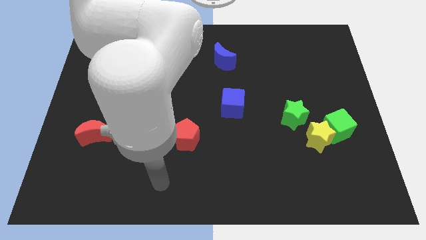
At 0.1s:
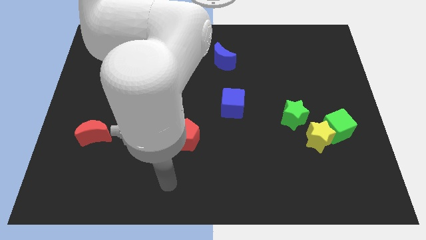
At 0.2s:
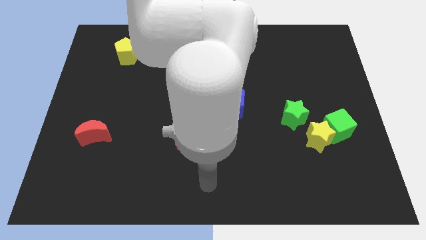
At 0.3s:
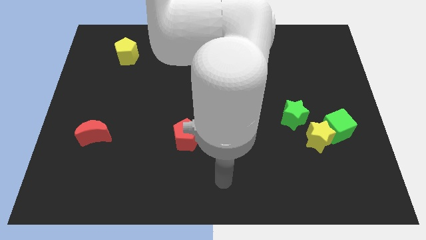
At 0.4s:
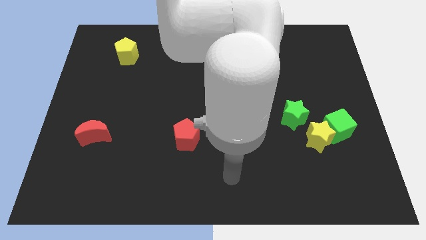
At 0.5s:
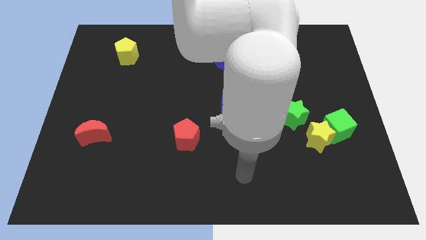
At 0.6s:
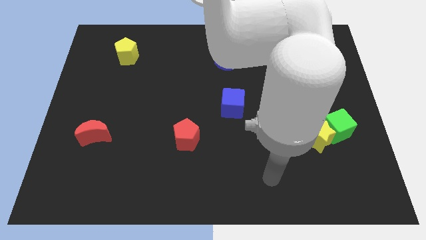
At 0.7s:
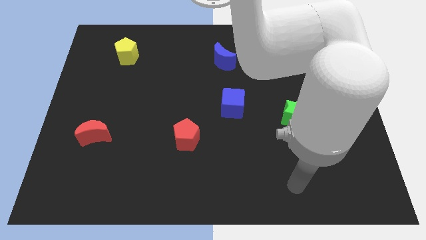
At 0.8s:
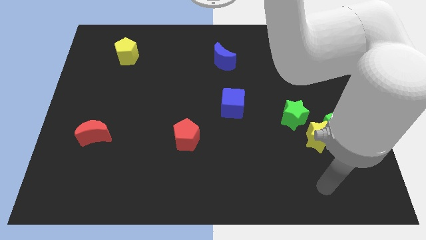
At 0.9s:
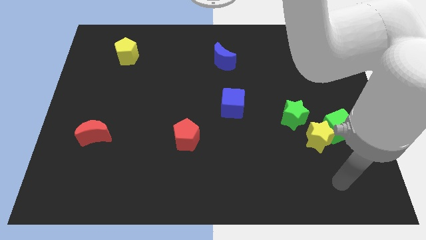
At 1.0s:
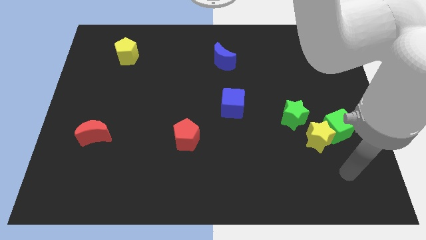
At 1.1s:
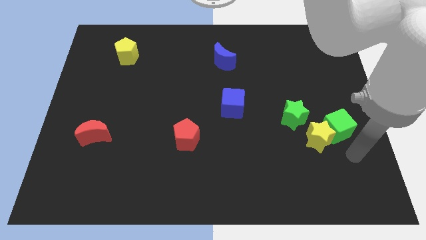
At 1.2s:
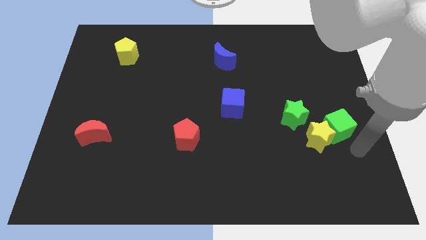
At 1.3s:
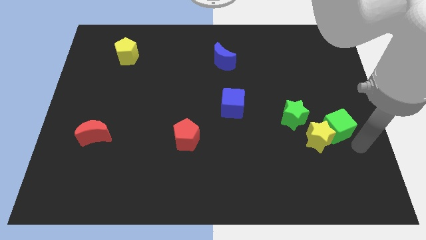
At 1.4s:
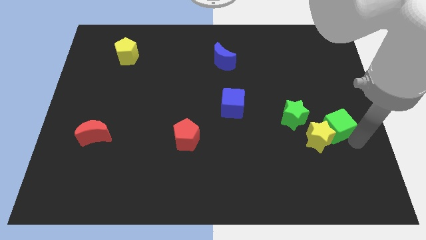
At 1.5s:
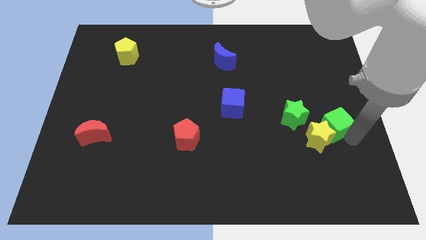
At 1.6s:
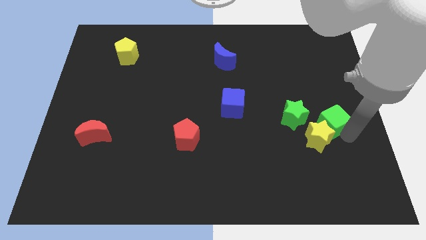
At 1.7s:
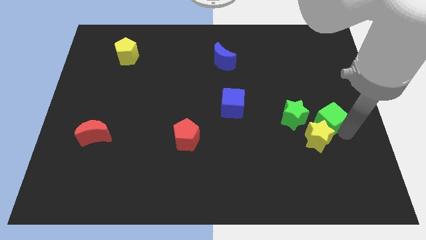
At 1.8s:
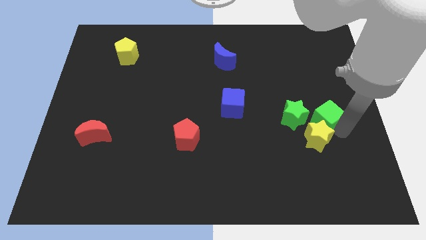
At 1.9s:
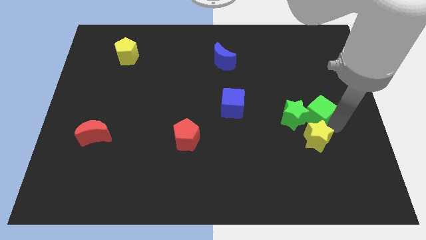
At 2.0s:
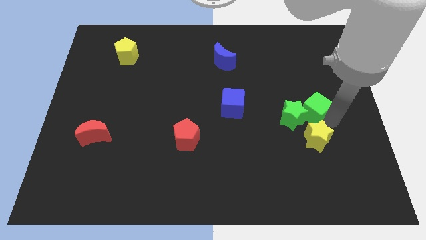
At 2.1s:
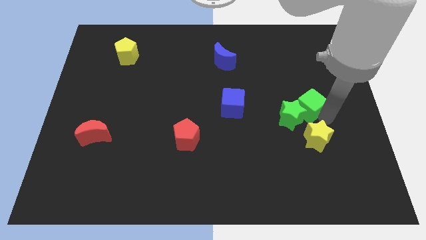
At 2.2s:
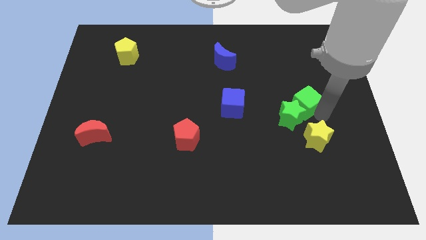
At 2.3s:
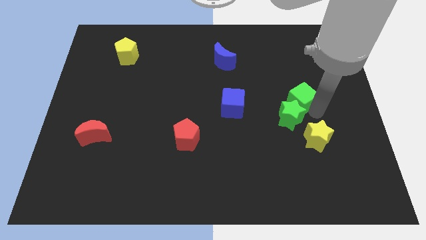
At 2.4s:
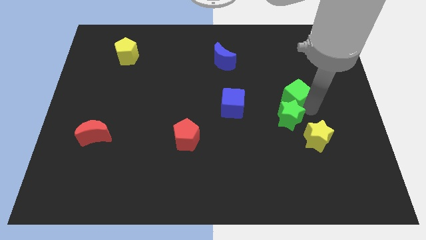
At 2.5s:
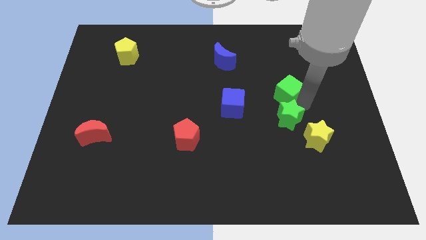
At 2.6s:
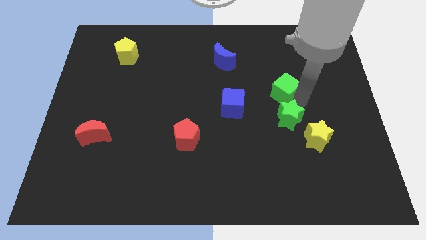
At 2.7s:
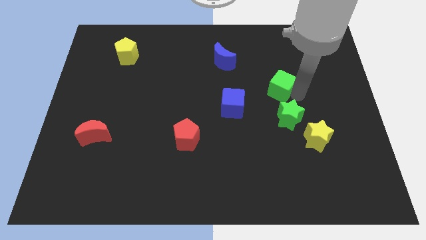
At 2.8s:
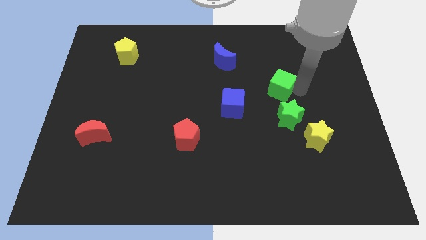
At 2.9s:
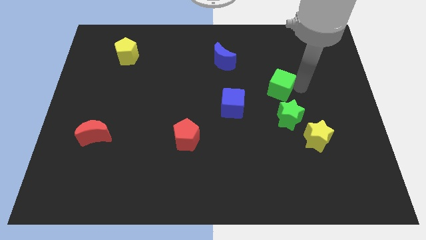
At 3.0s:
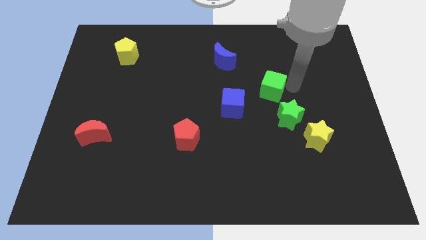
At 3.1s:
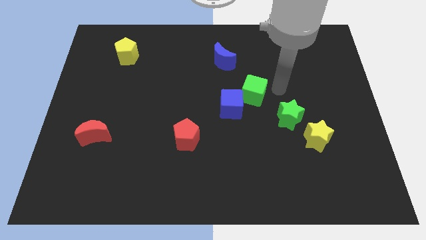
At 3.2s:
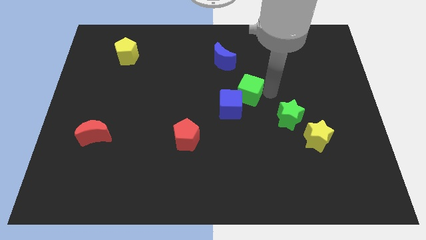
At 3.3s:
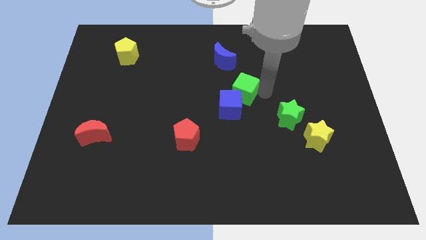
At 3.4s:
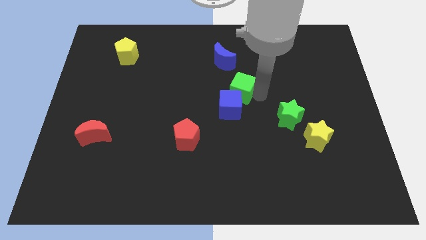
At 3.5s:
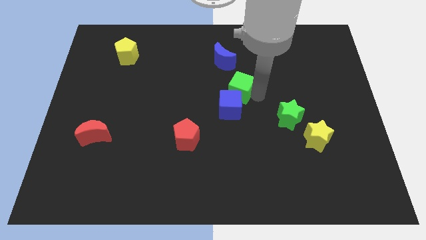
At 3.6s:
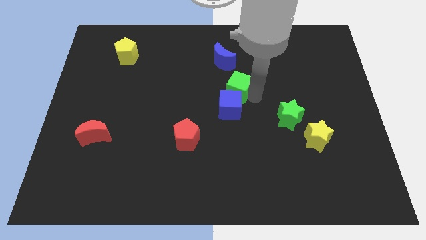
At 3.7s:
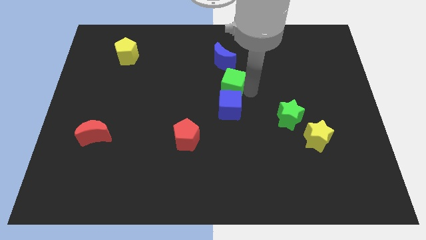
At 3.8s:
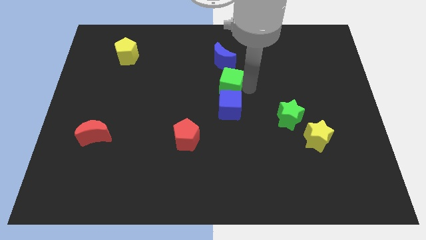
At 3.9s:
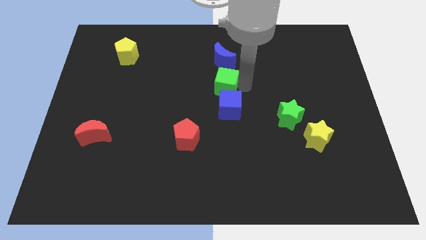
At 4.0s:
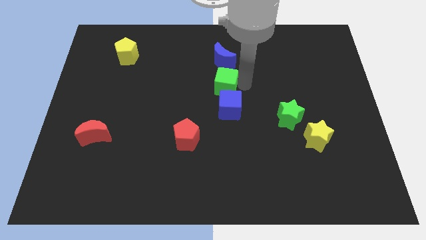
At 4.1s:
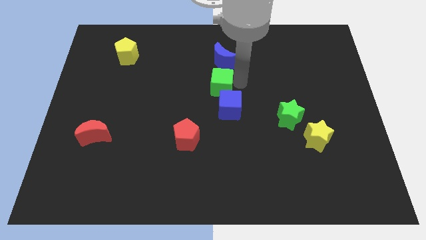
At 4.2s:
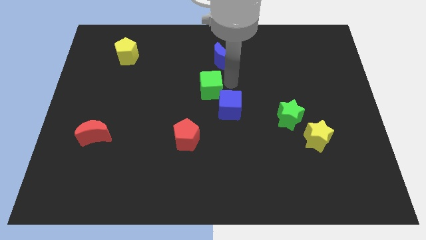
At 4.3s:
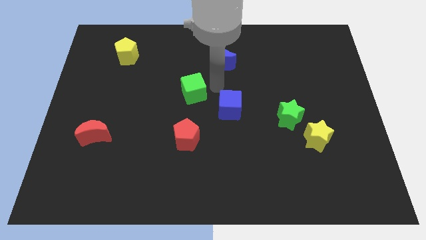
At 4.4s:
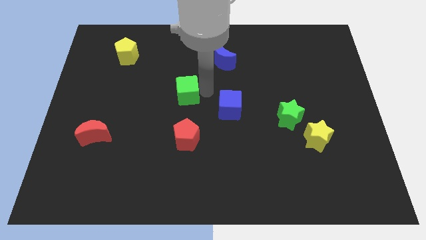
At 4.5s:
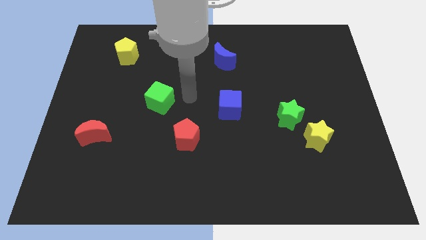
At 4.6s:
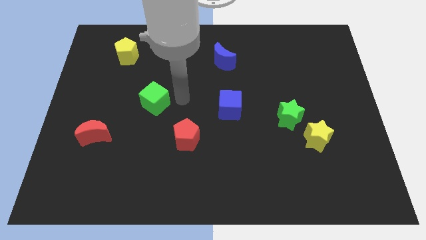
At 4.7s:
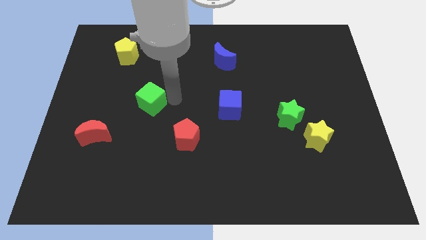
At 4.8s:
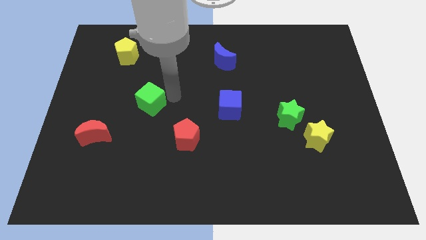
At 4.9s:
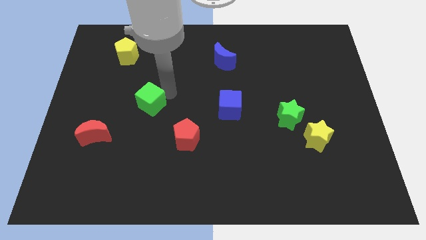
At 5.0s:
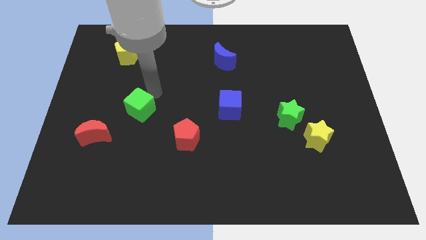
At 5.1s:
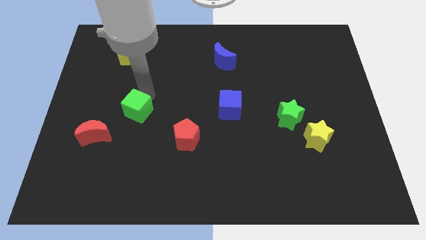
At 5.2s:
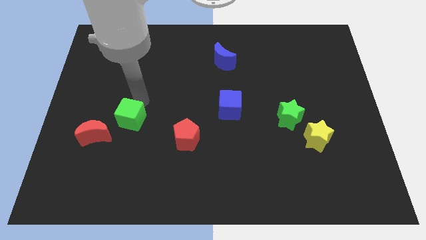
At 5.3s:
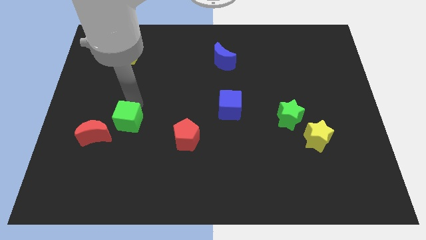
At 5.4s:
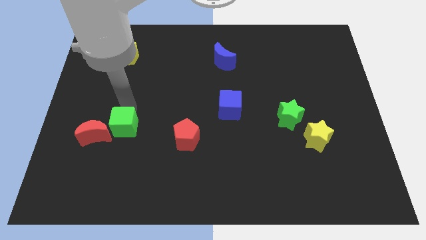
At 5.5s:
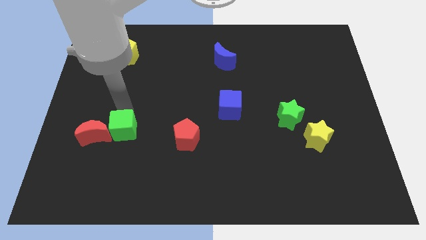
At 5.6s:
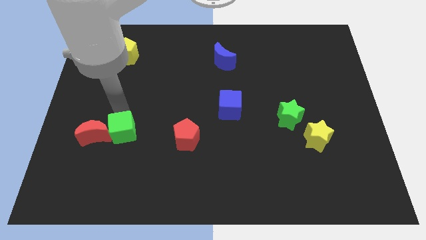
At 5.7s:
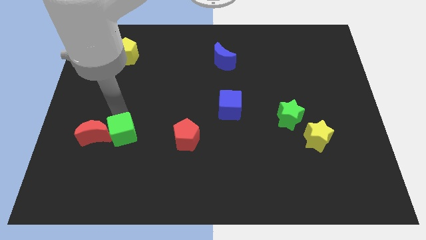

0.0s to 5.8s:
push the green cube to the red moon

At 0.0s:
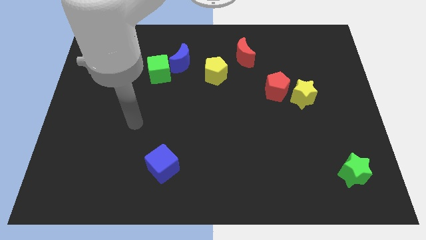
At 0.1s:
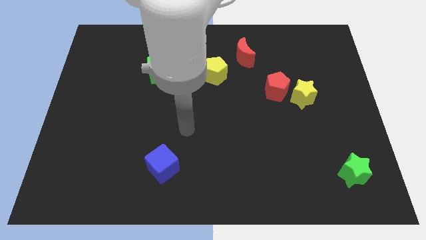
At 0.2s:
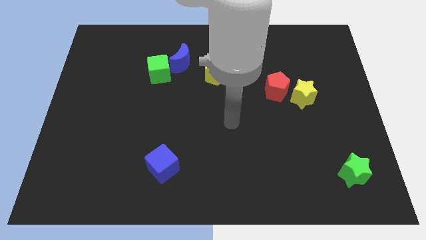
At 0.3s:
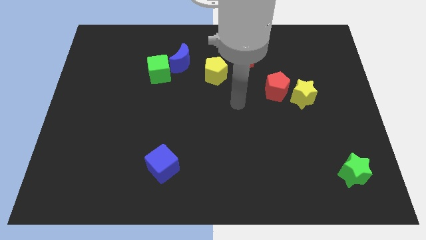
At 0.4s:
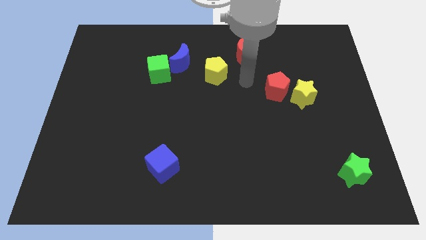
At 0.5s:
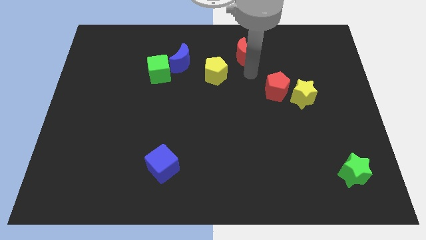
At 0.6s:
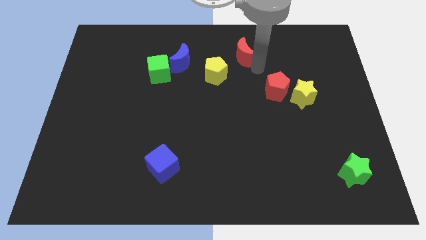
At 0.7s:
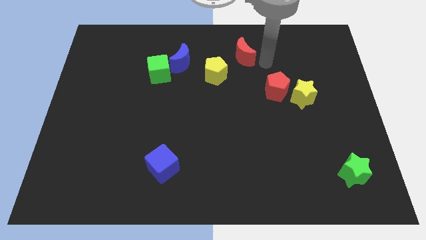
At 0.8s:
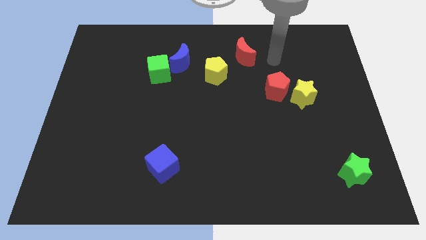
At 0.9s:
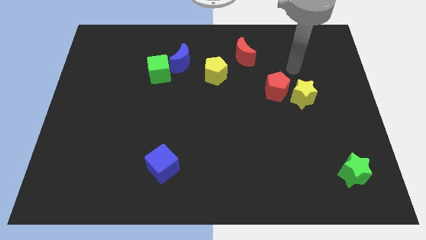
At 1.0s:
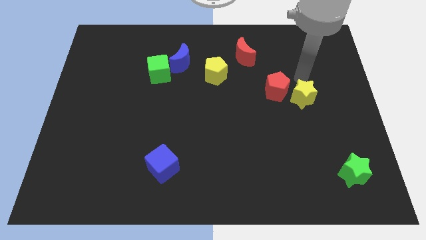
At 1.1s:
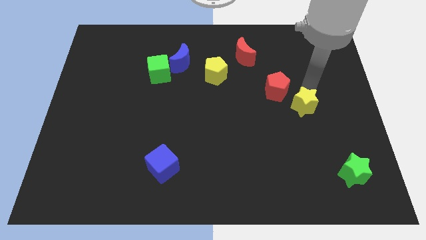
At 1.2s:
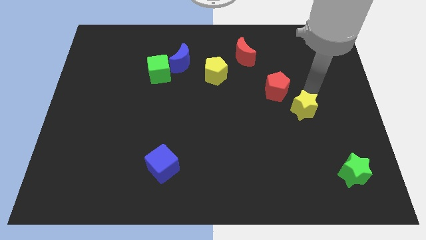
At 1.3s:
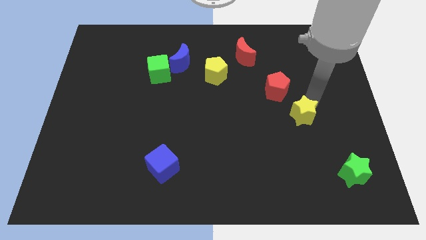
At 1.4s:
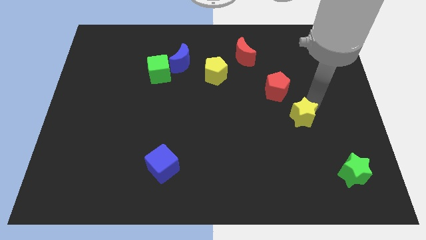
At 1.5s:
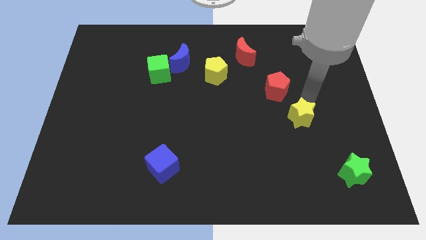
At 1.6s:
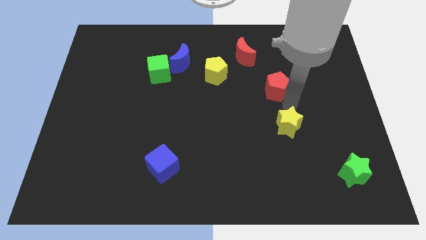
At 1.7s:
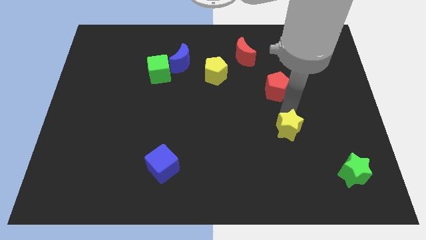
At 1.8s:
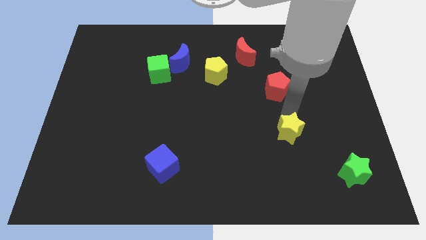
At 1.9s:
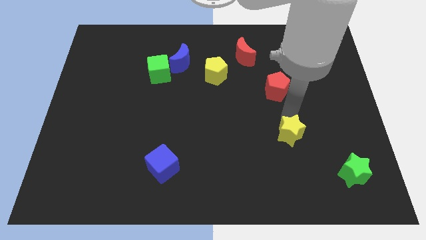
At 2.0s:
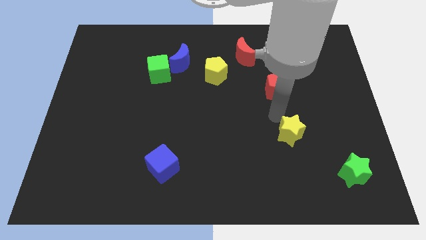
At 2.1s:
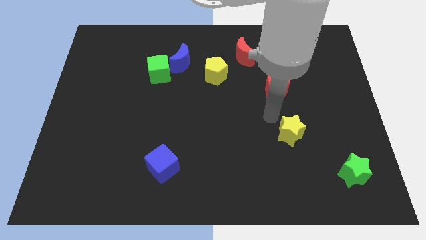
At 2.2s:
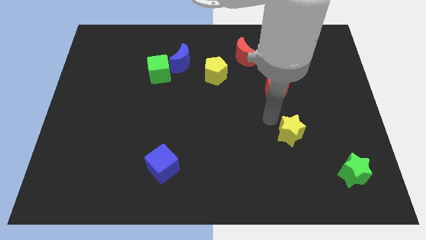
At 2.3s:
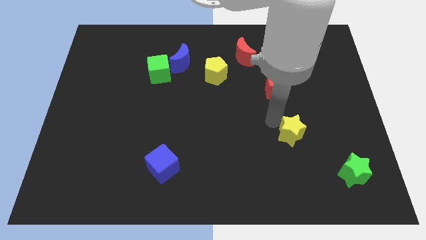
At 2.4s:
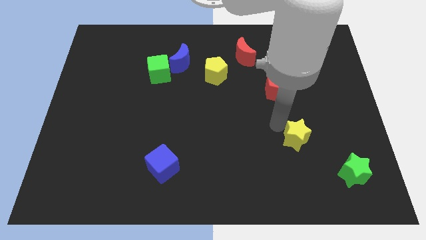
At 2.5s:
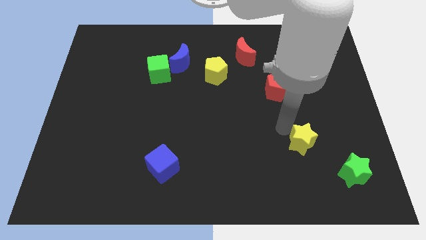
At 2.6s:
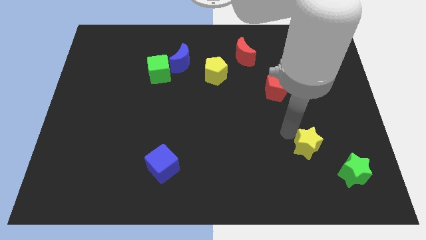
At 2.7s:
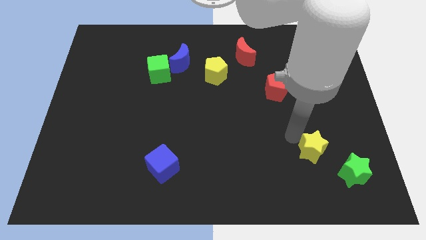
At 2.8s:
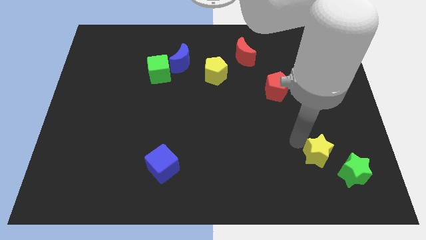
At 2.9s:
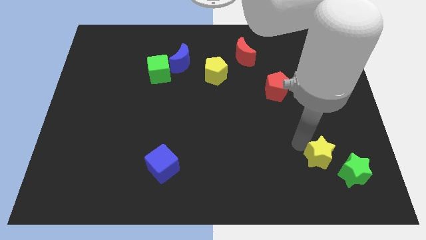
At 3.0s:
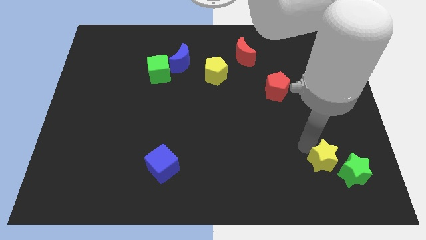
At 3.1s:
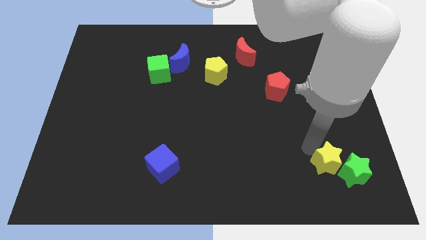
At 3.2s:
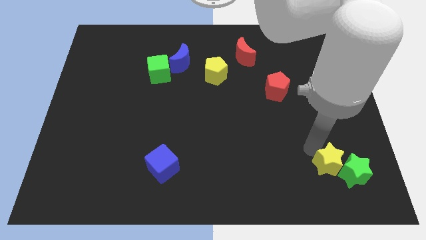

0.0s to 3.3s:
move the yellow star to the green star
